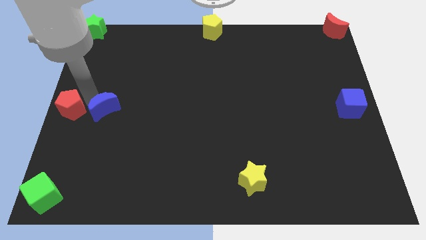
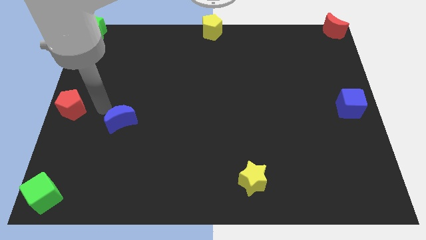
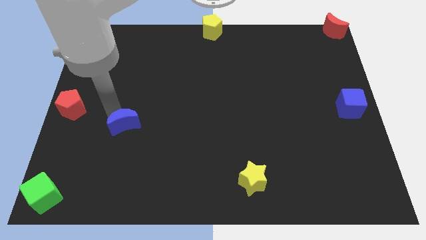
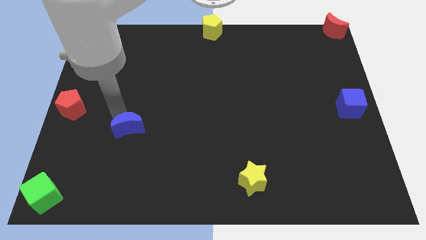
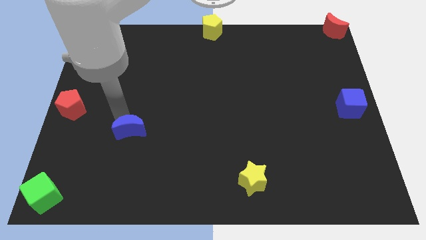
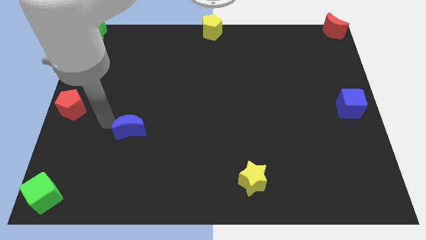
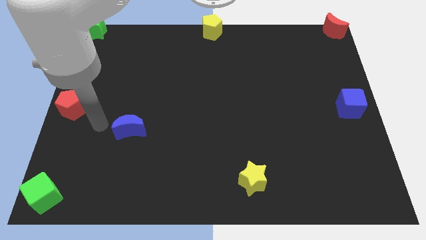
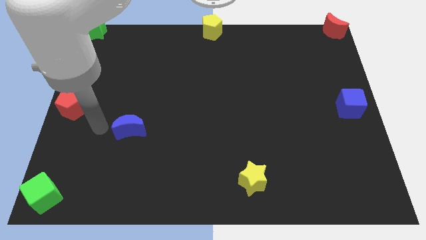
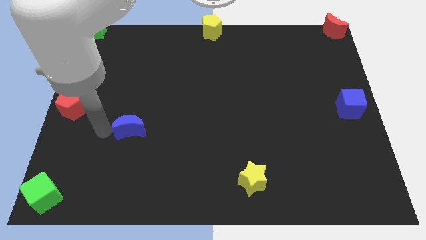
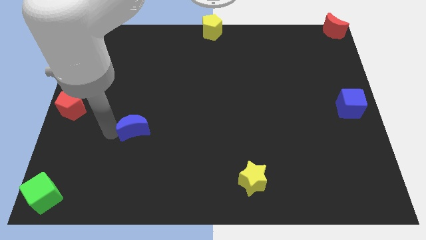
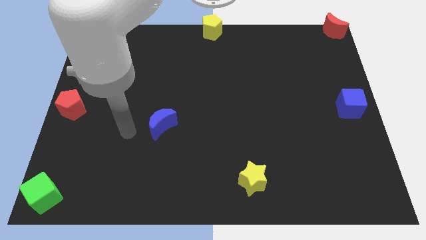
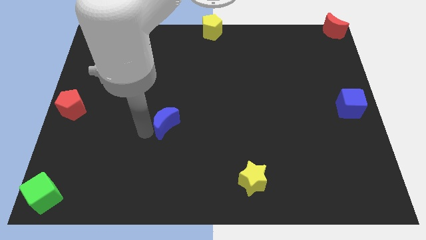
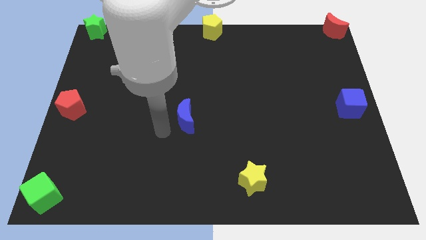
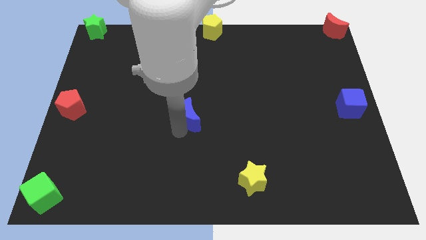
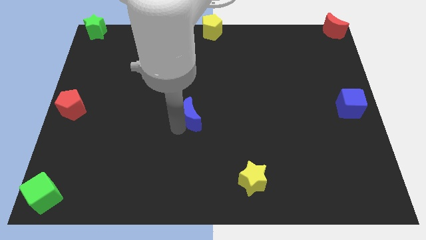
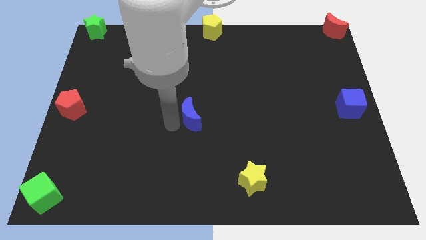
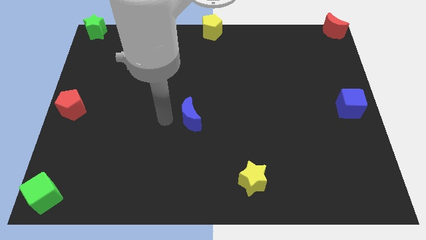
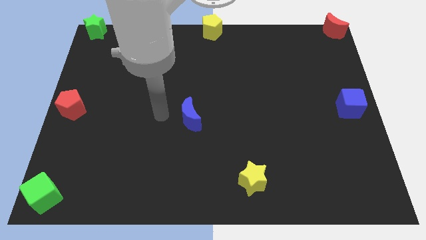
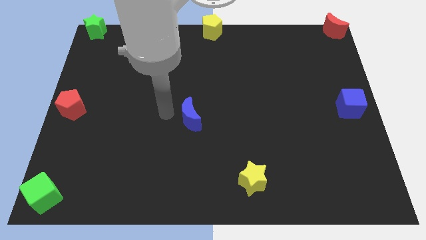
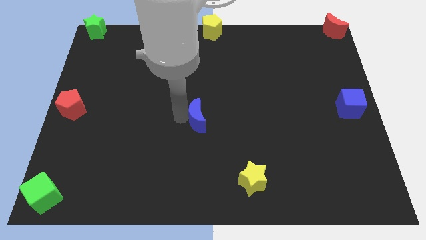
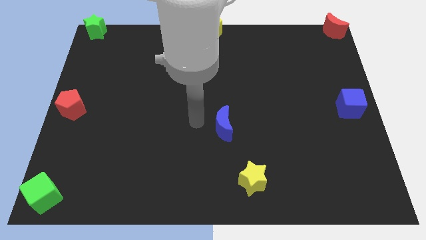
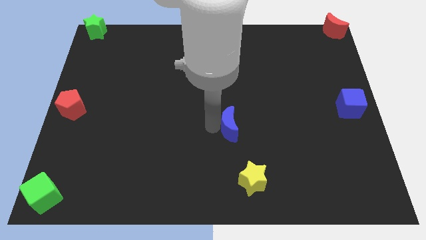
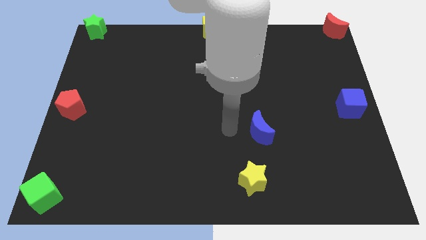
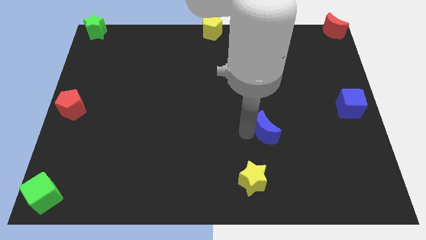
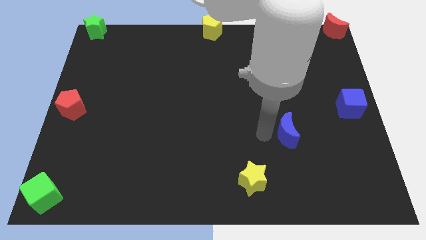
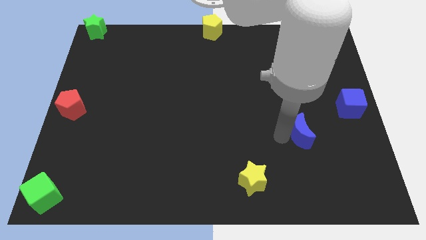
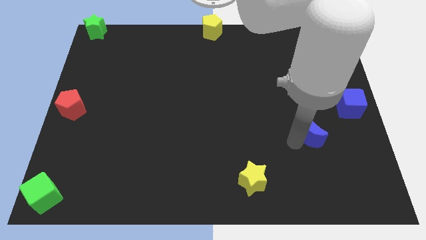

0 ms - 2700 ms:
push blue crescent diagonally above yellow star

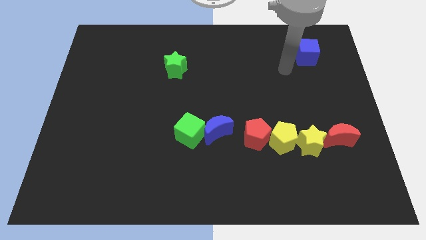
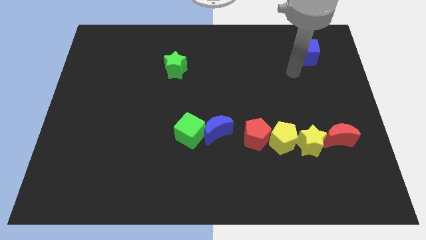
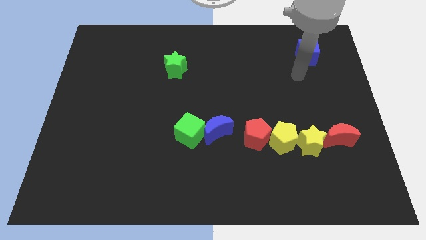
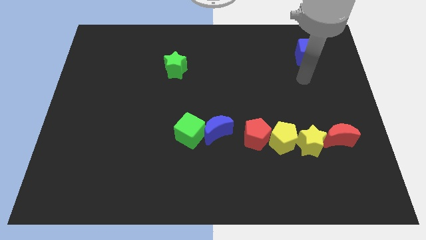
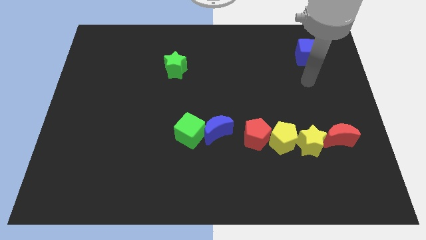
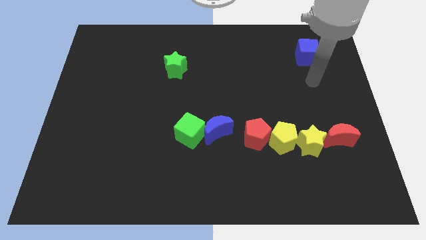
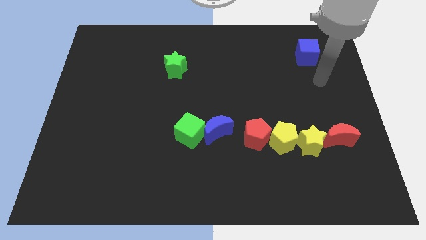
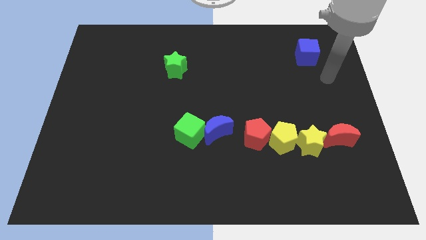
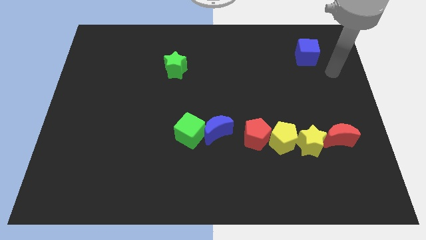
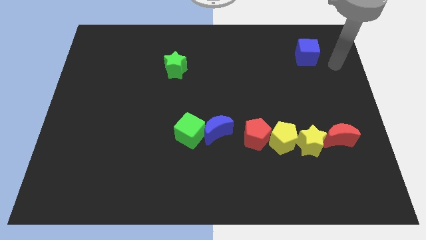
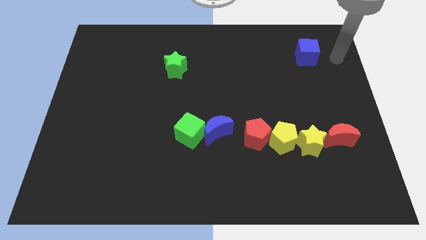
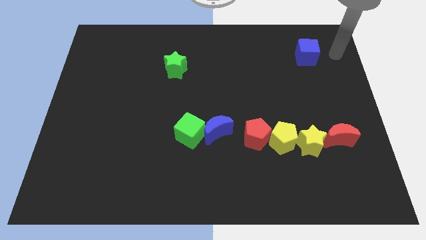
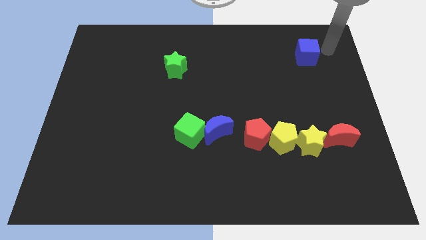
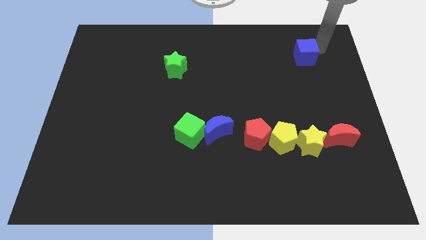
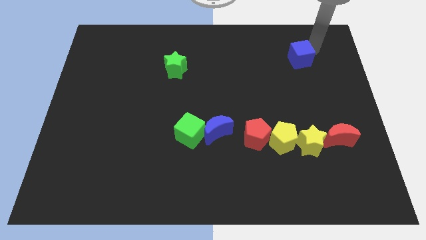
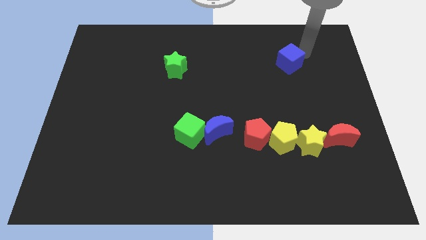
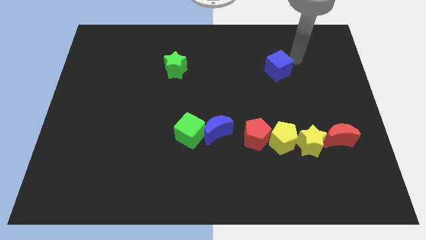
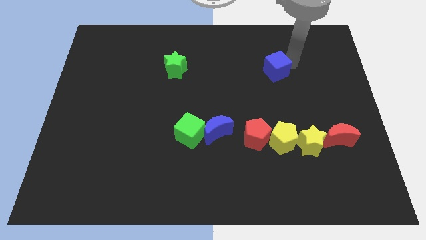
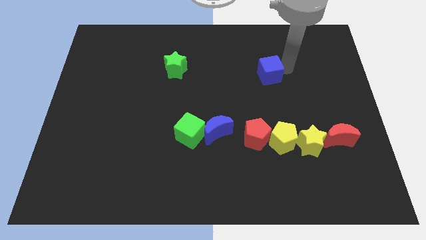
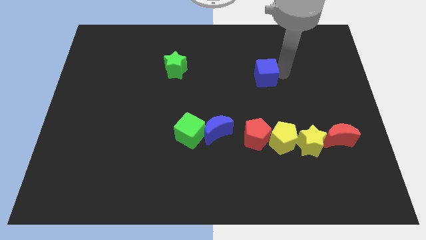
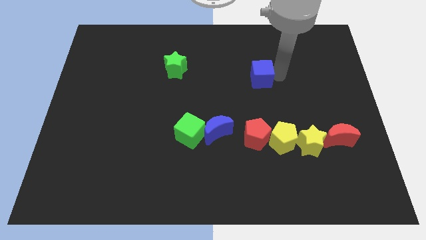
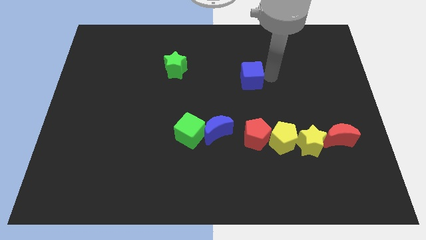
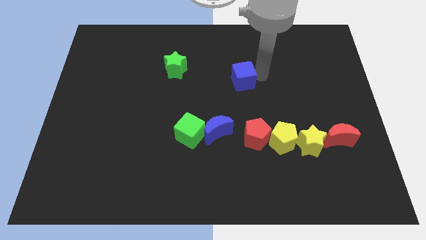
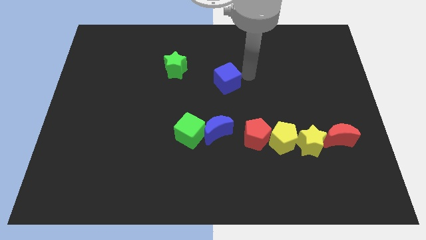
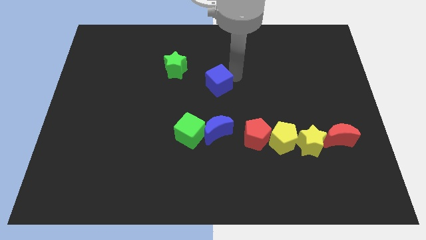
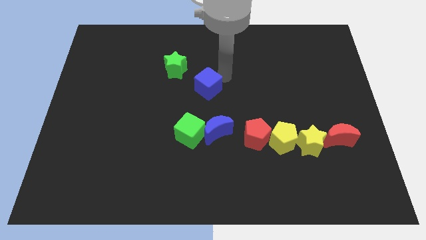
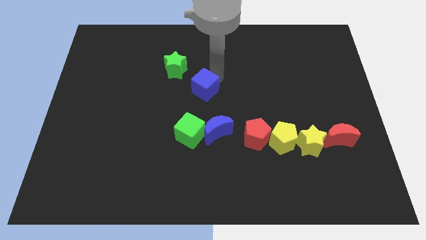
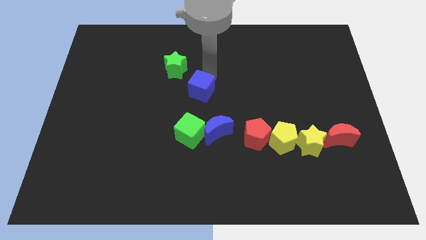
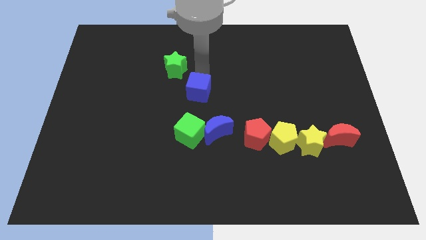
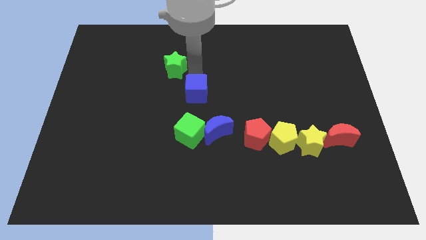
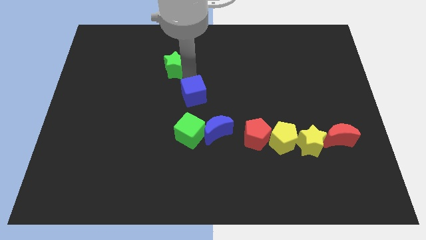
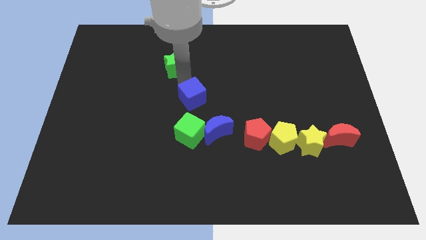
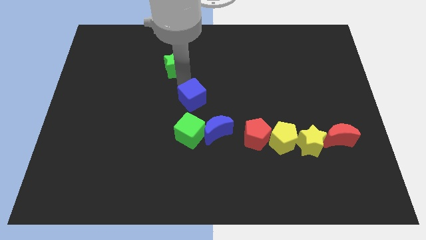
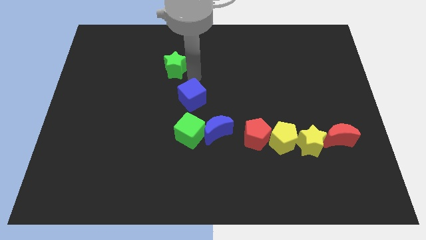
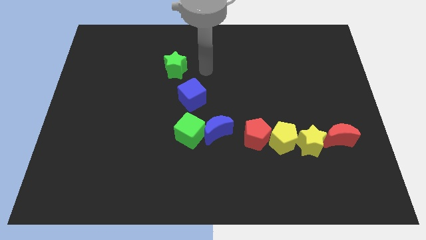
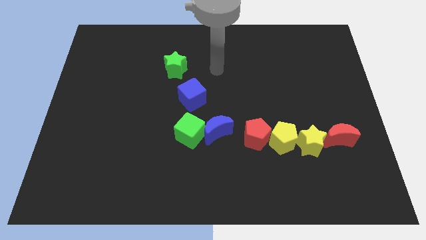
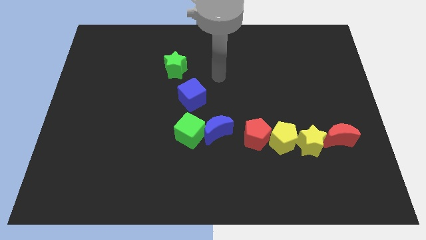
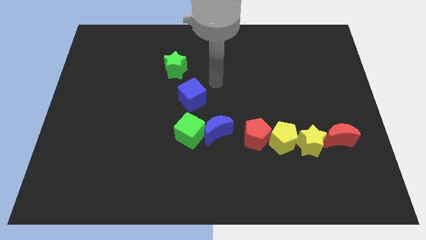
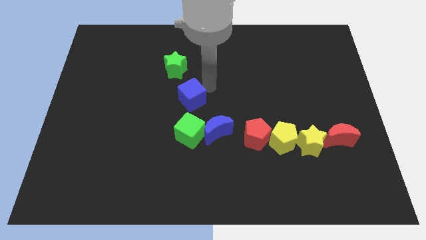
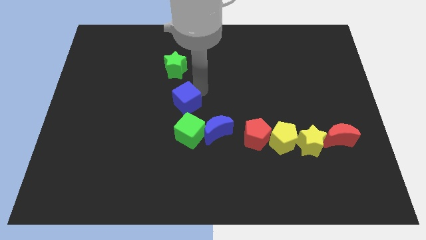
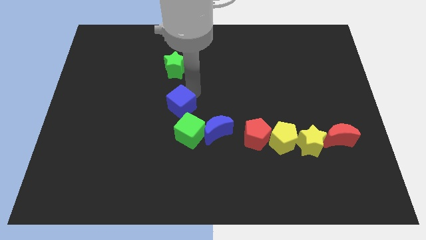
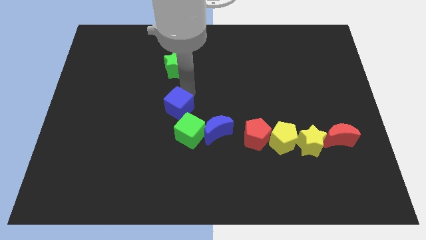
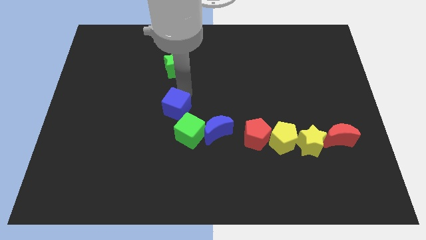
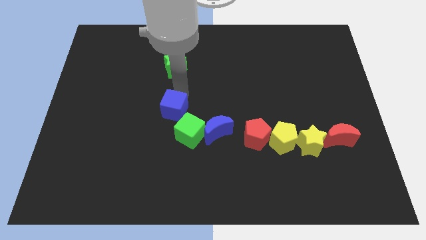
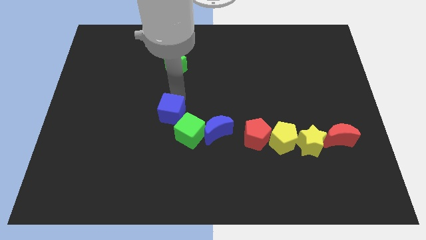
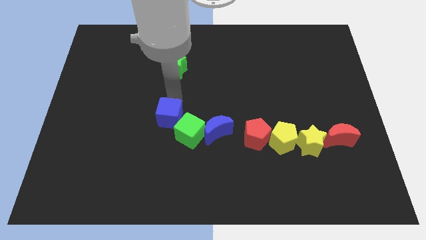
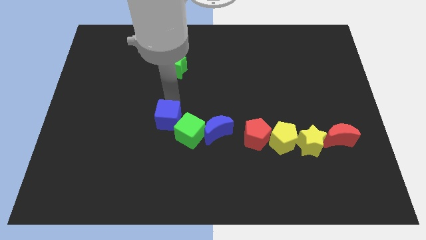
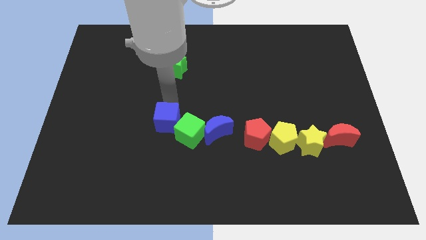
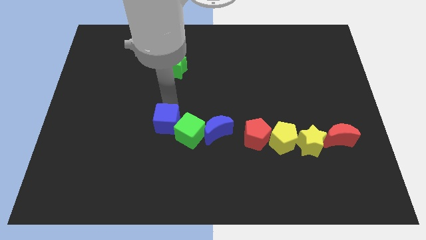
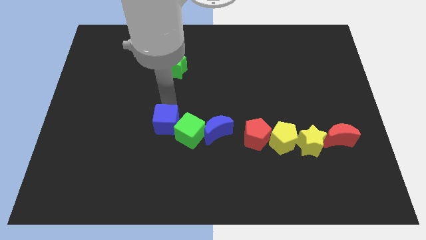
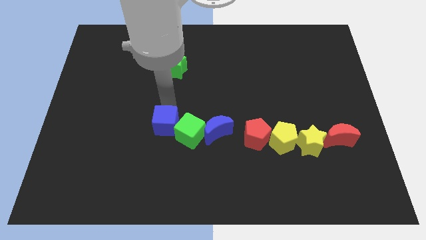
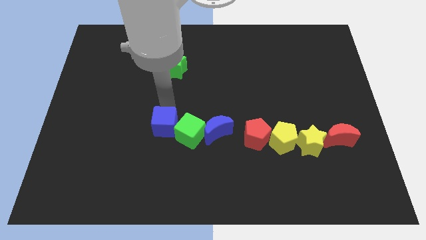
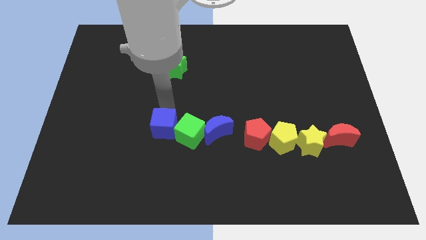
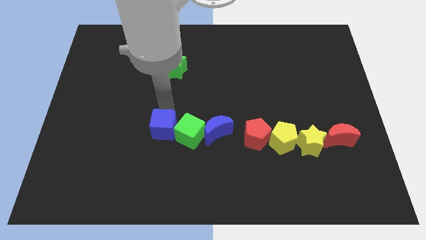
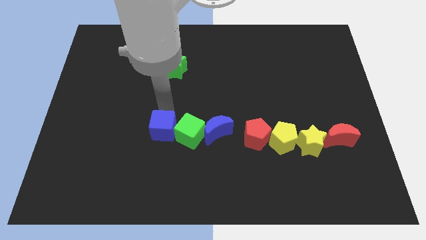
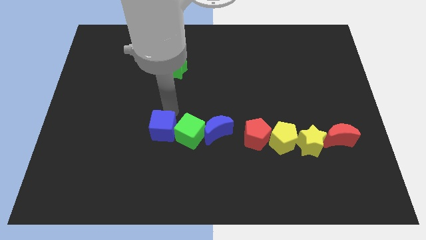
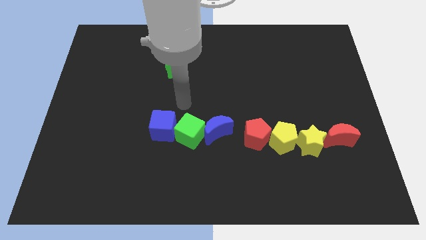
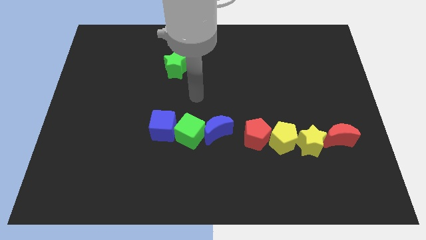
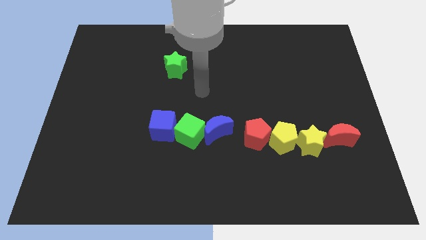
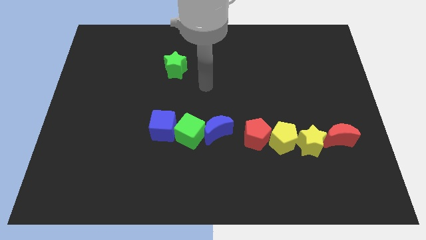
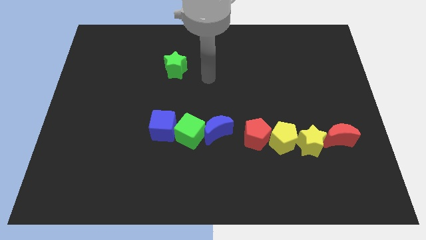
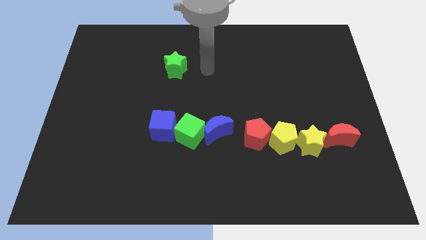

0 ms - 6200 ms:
move the blue cube left to the green cube
